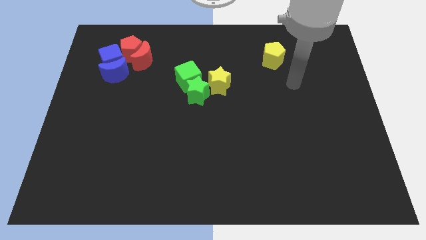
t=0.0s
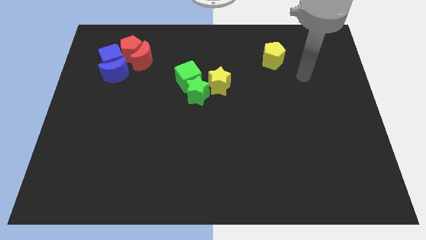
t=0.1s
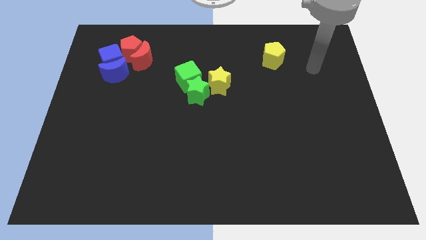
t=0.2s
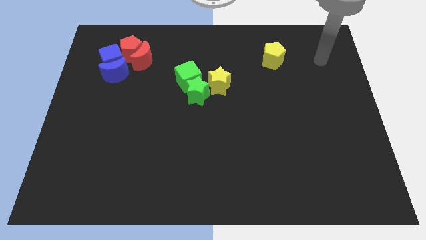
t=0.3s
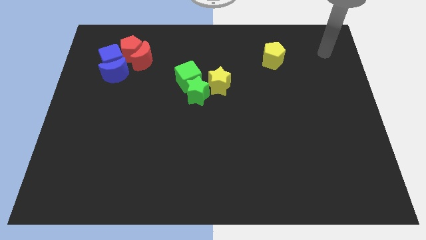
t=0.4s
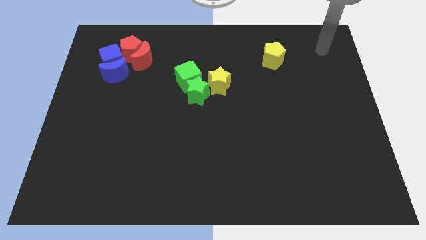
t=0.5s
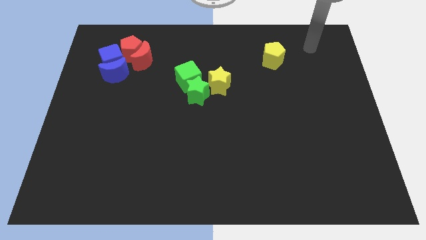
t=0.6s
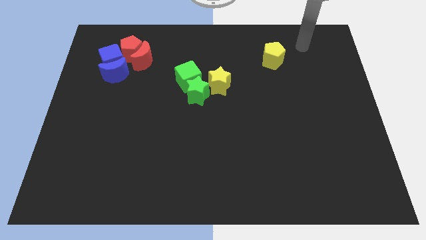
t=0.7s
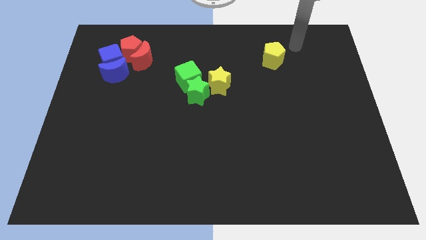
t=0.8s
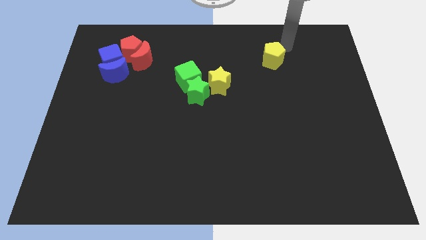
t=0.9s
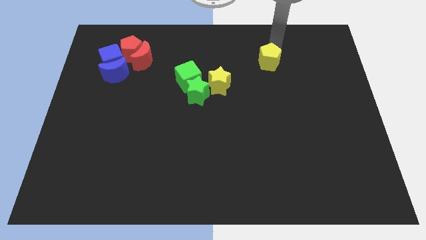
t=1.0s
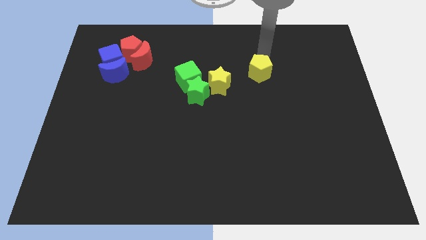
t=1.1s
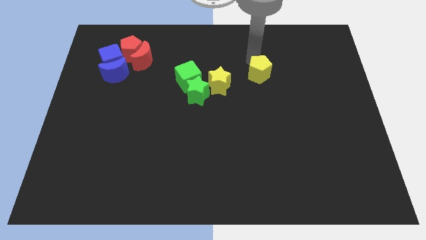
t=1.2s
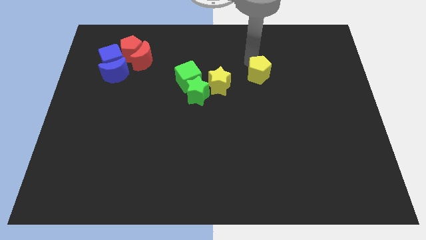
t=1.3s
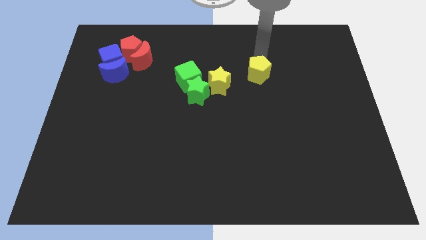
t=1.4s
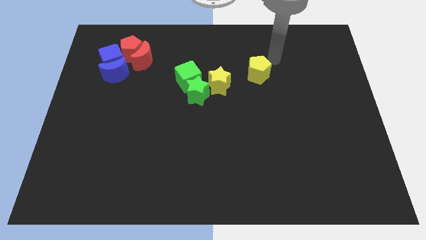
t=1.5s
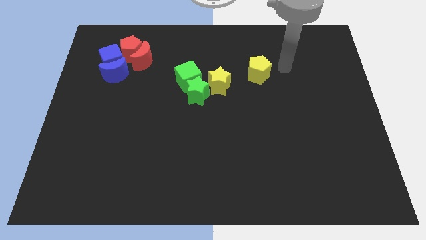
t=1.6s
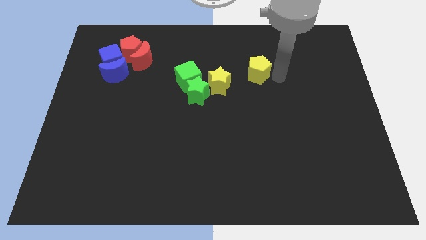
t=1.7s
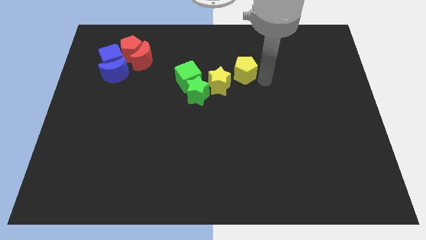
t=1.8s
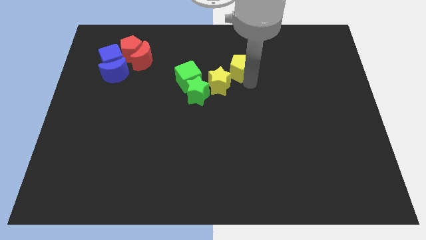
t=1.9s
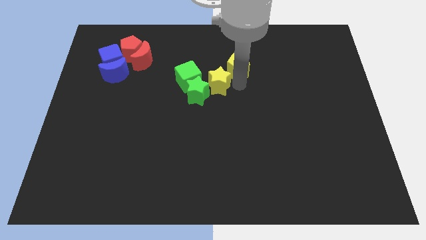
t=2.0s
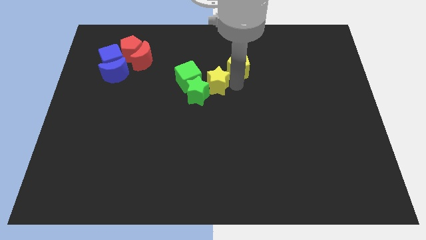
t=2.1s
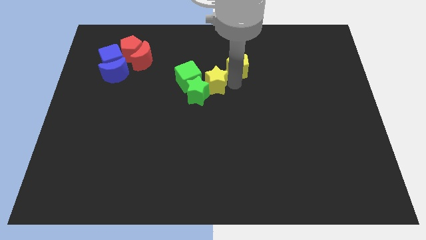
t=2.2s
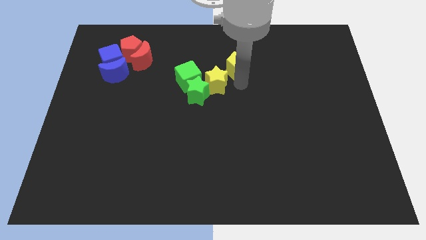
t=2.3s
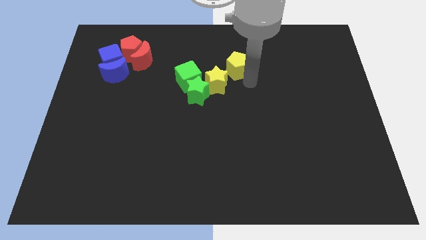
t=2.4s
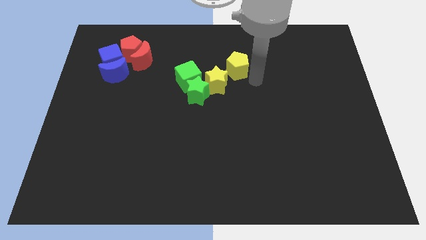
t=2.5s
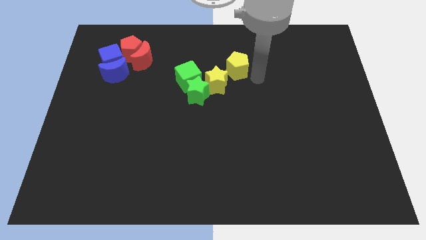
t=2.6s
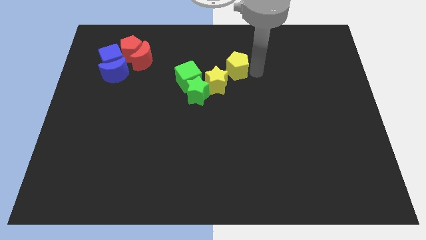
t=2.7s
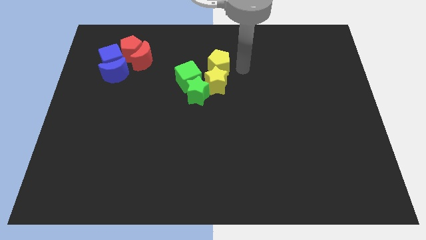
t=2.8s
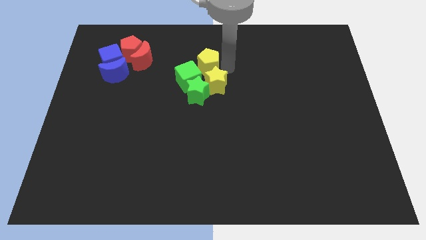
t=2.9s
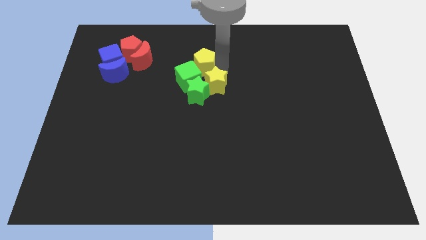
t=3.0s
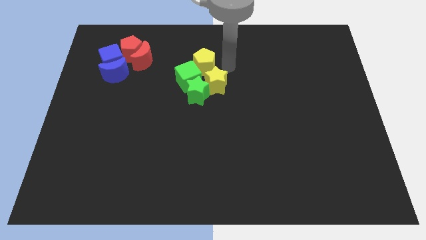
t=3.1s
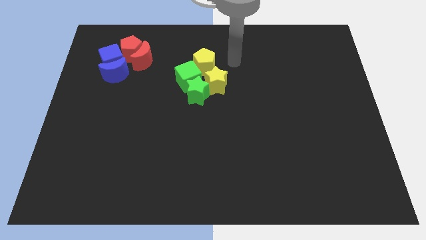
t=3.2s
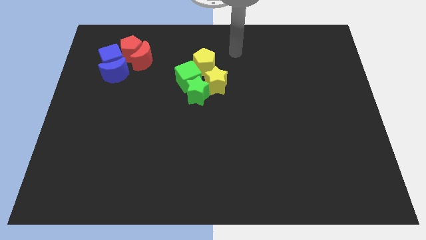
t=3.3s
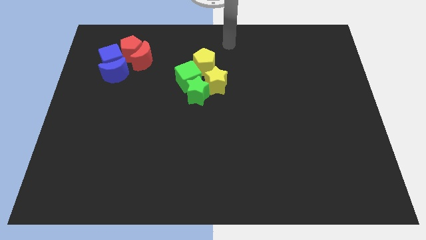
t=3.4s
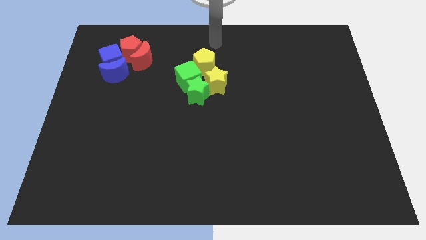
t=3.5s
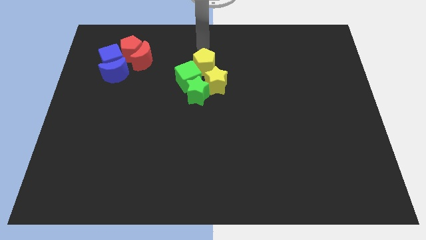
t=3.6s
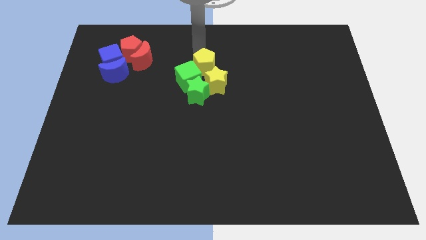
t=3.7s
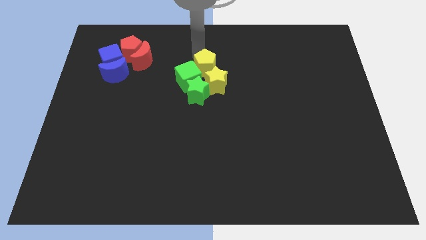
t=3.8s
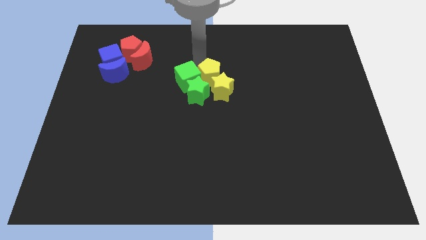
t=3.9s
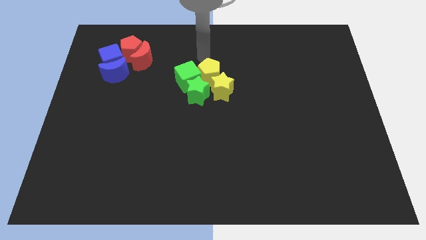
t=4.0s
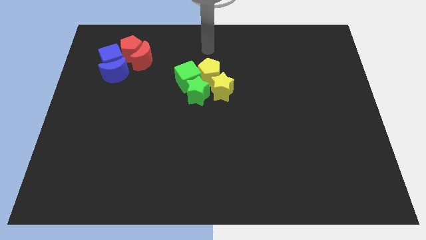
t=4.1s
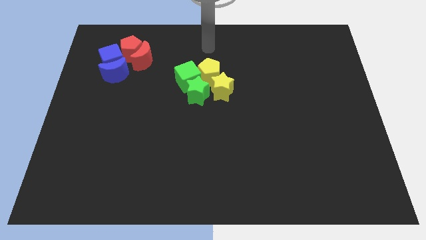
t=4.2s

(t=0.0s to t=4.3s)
push the yellow pentagon to the top side of the yellow star

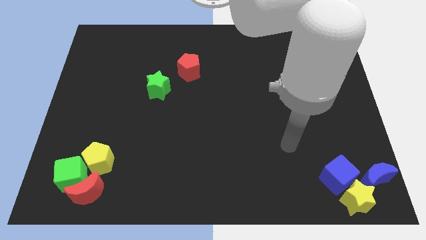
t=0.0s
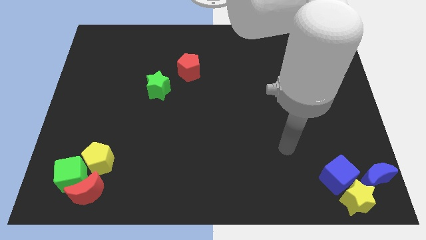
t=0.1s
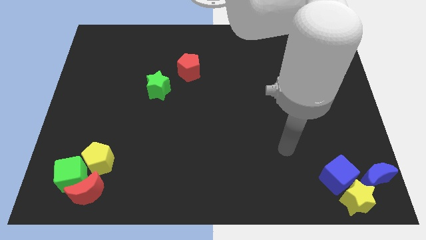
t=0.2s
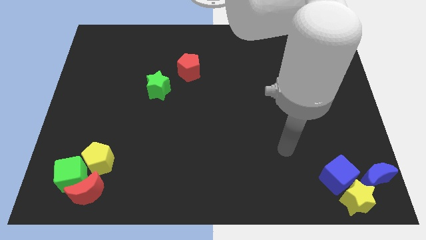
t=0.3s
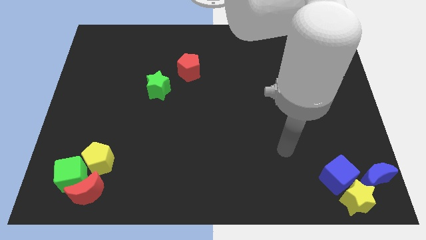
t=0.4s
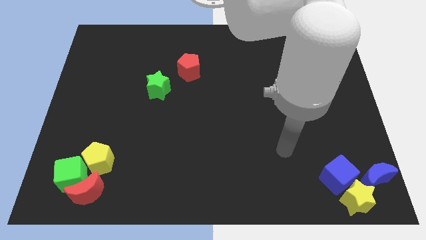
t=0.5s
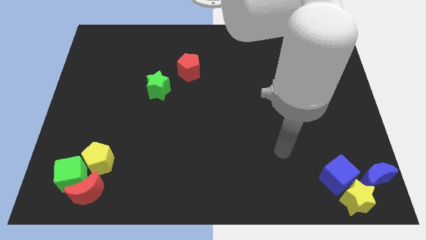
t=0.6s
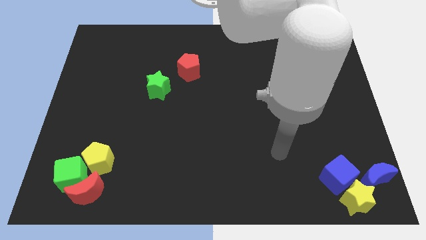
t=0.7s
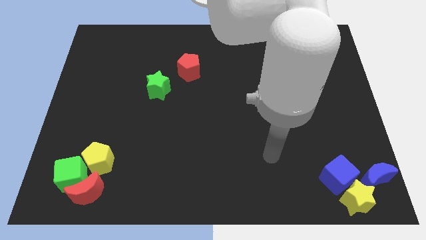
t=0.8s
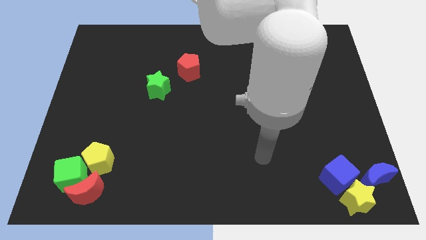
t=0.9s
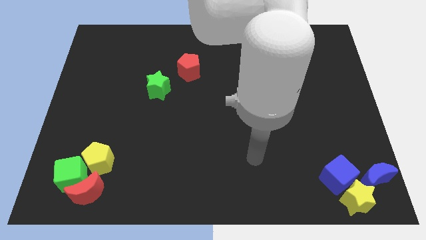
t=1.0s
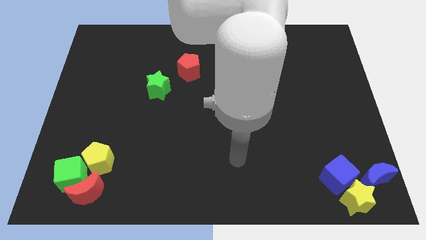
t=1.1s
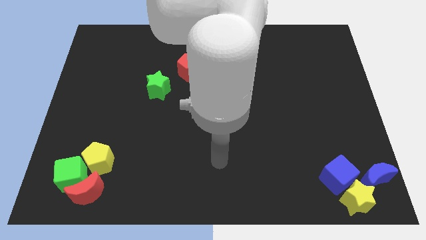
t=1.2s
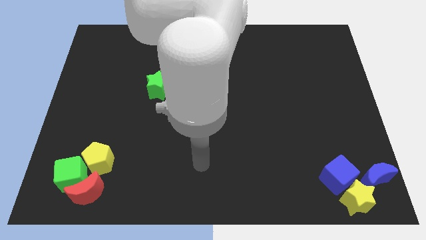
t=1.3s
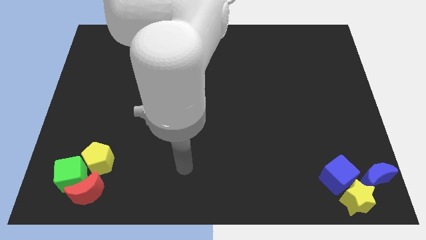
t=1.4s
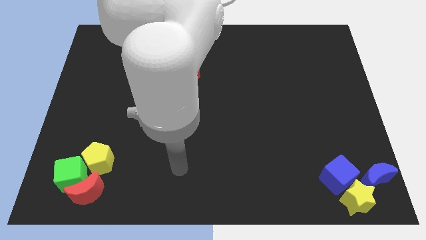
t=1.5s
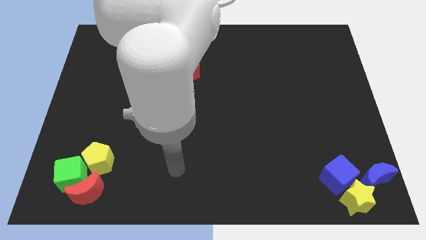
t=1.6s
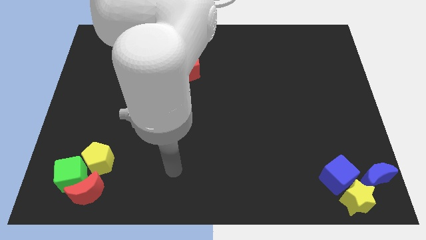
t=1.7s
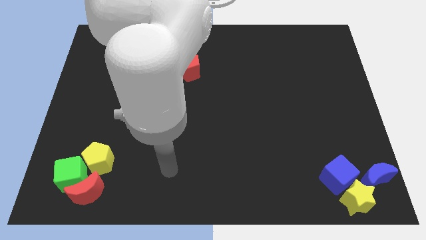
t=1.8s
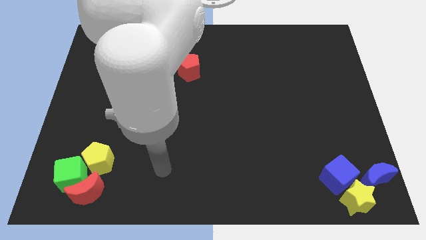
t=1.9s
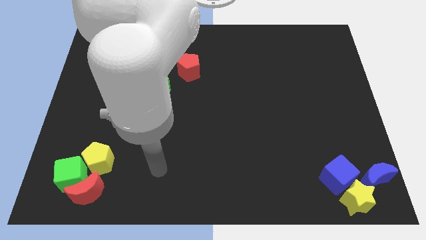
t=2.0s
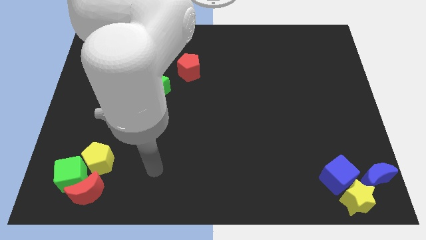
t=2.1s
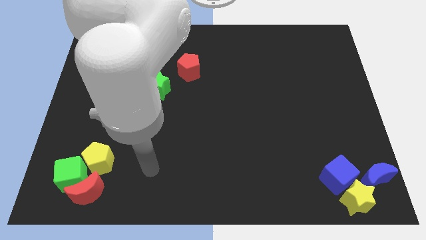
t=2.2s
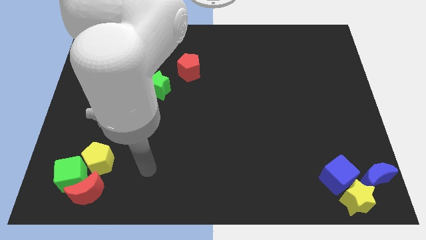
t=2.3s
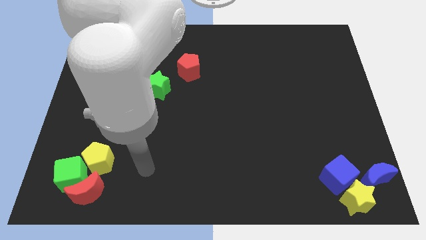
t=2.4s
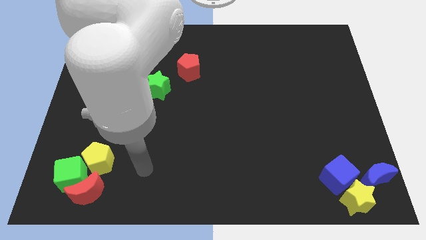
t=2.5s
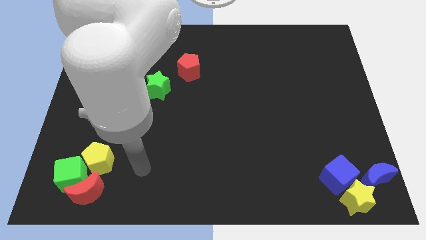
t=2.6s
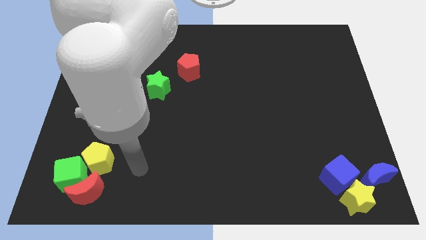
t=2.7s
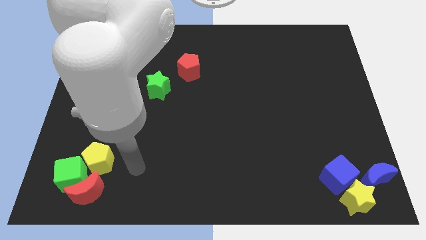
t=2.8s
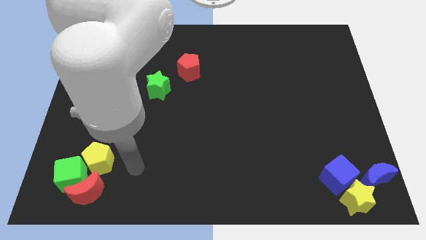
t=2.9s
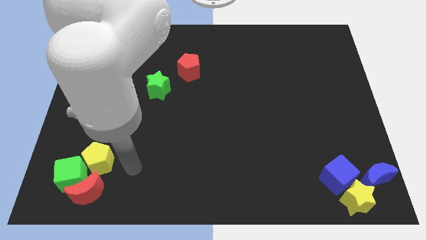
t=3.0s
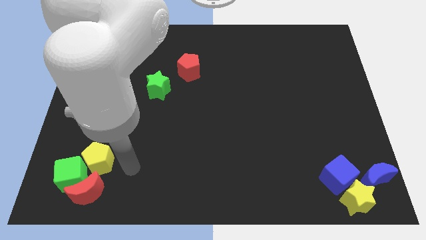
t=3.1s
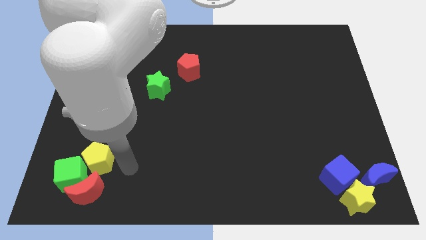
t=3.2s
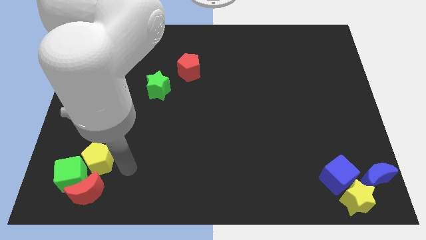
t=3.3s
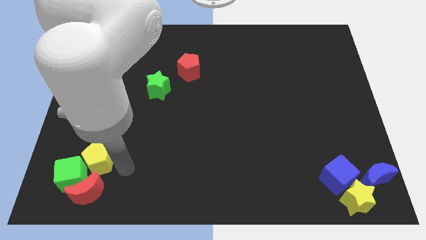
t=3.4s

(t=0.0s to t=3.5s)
move arm towards yellow pentagon

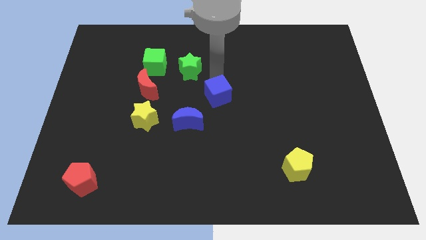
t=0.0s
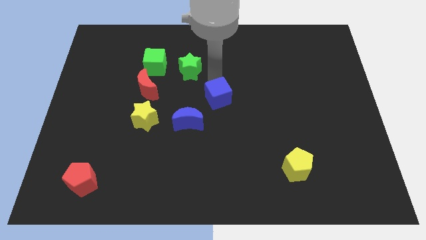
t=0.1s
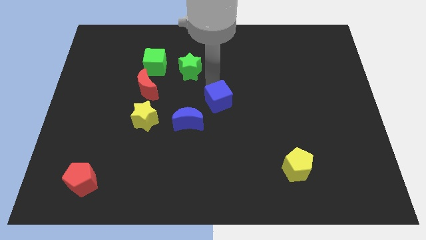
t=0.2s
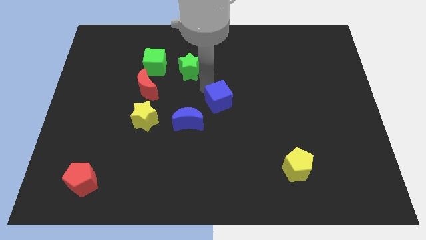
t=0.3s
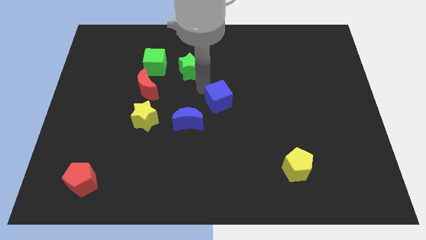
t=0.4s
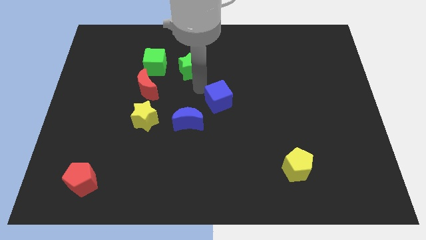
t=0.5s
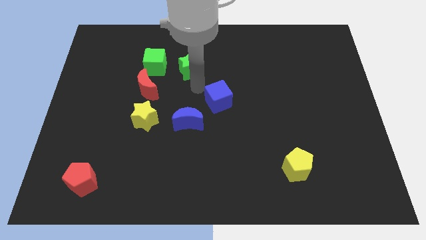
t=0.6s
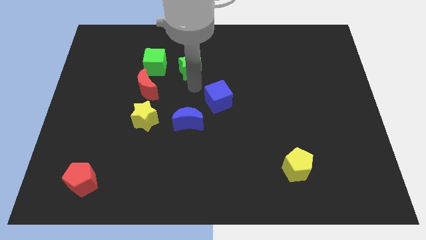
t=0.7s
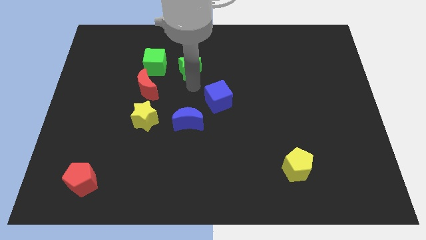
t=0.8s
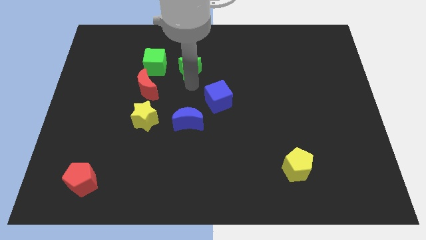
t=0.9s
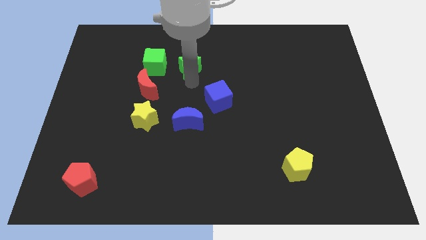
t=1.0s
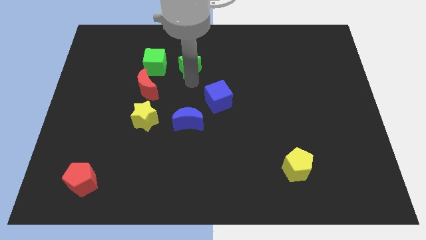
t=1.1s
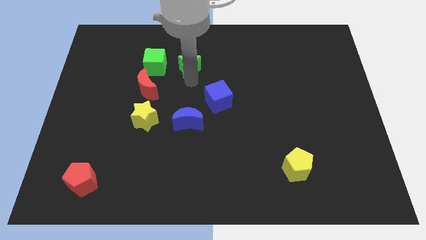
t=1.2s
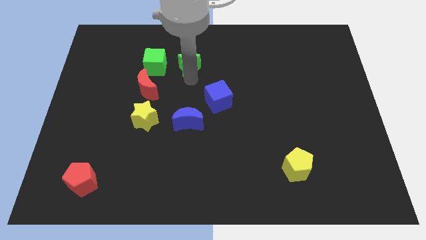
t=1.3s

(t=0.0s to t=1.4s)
move blue cube slightly down on the board
